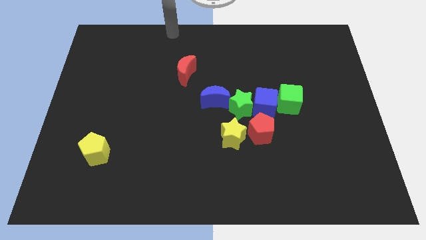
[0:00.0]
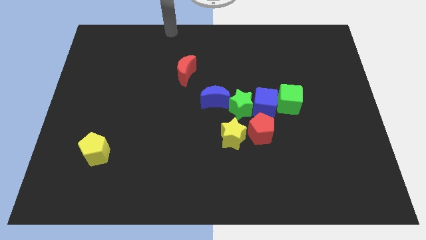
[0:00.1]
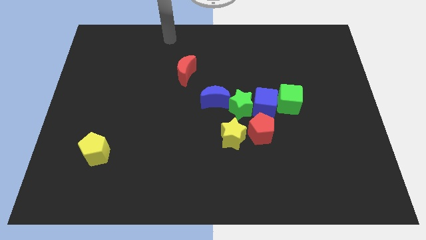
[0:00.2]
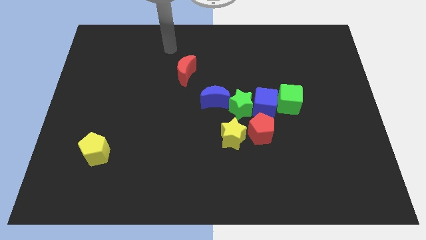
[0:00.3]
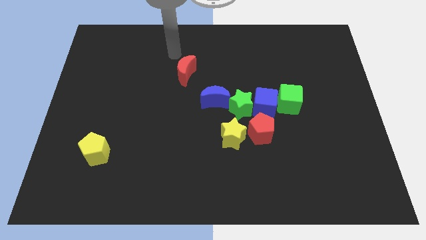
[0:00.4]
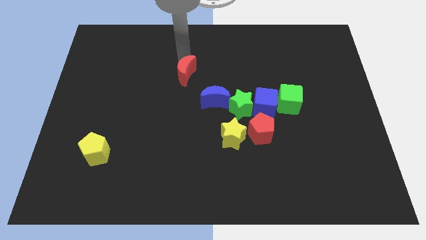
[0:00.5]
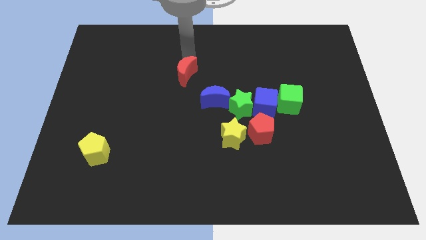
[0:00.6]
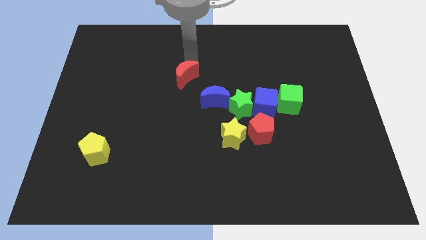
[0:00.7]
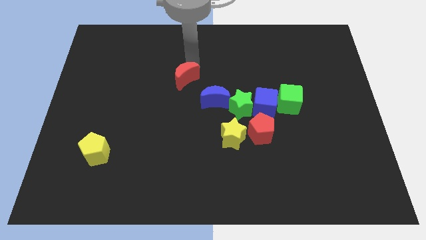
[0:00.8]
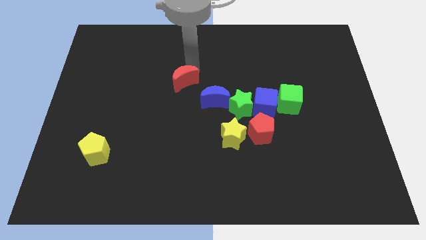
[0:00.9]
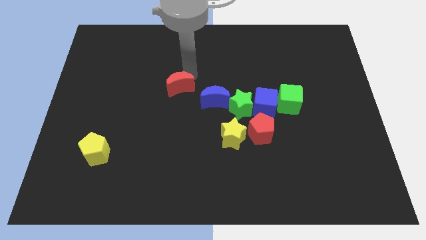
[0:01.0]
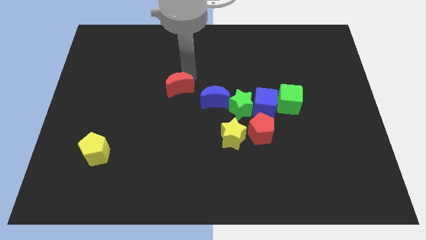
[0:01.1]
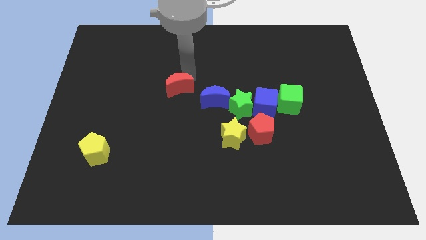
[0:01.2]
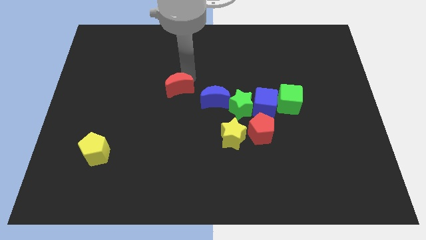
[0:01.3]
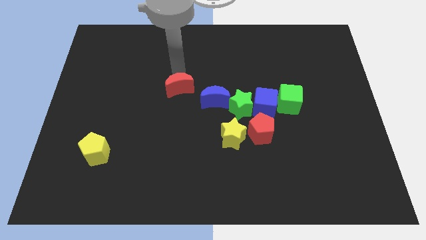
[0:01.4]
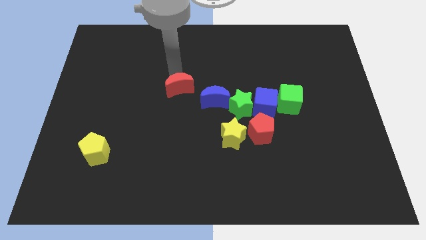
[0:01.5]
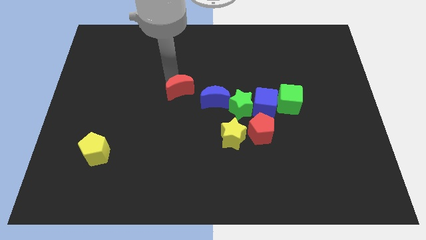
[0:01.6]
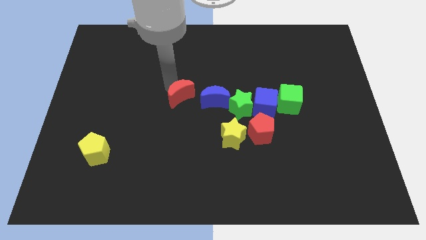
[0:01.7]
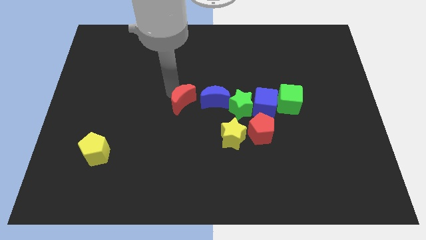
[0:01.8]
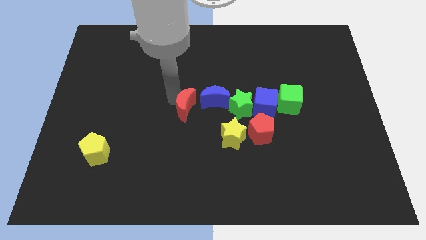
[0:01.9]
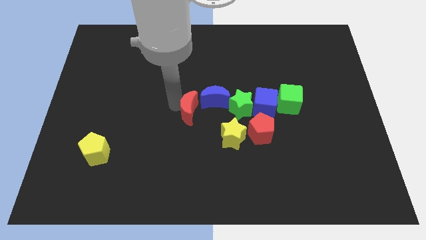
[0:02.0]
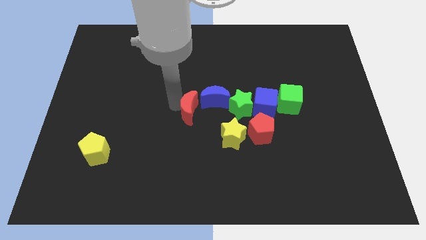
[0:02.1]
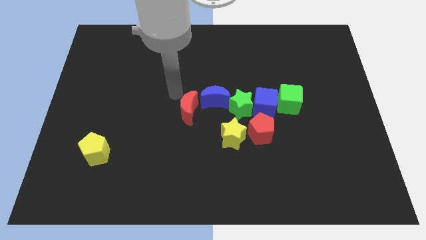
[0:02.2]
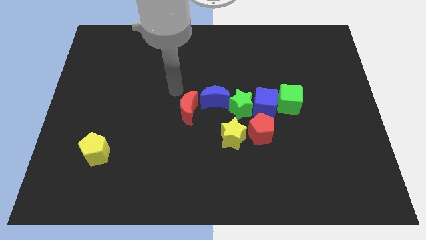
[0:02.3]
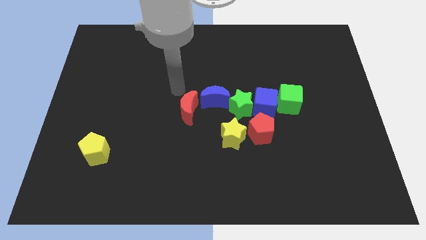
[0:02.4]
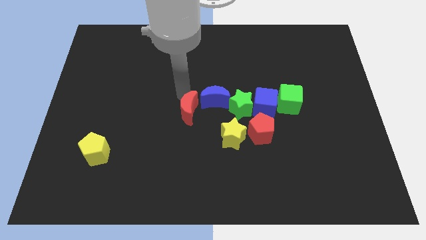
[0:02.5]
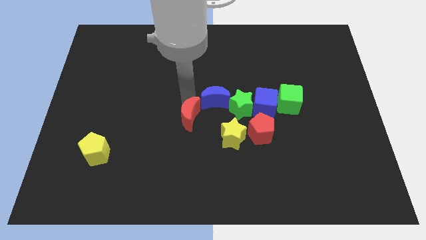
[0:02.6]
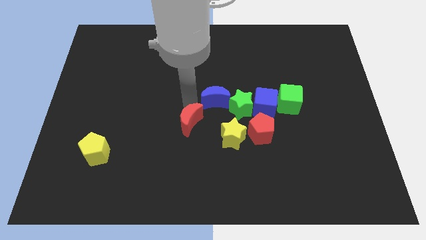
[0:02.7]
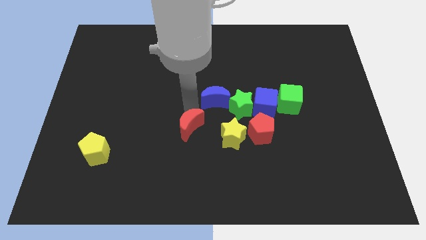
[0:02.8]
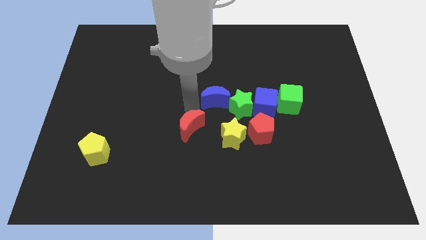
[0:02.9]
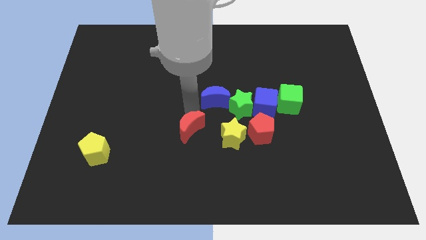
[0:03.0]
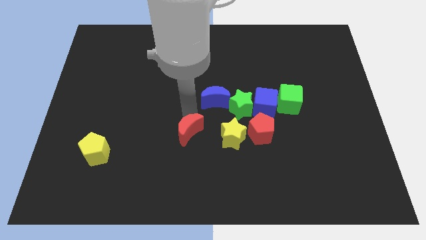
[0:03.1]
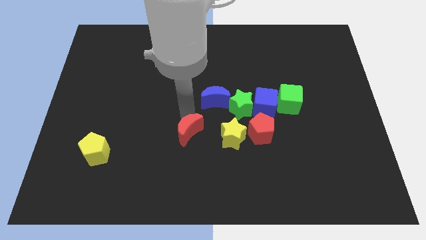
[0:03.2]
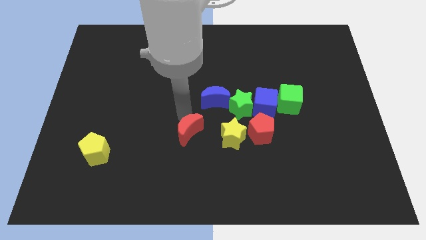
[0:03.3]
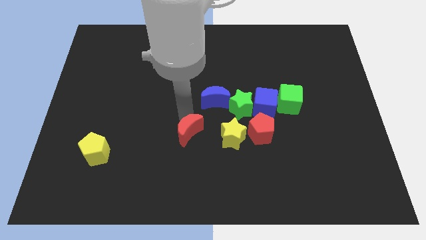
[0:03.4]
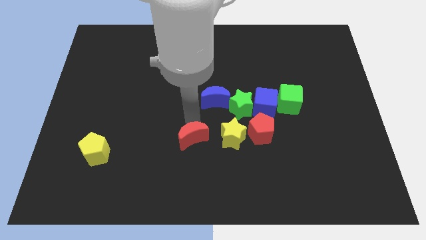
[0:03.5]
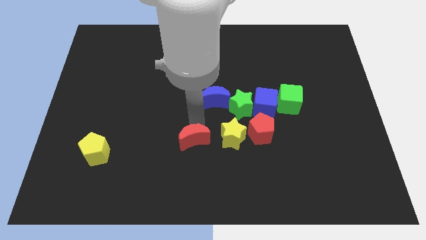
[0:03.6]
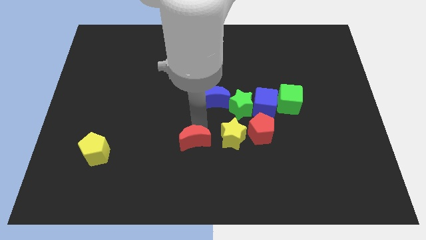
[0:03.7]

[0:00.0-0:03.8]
place red moon to the left of yellow star

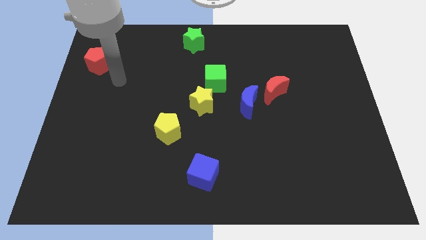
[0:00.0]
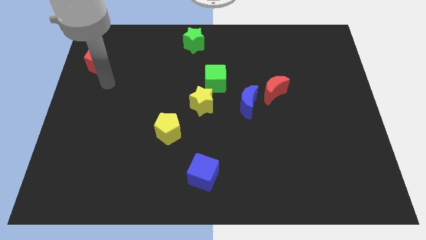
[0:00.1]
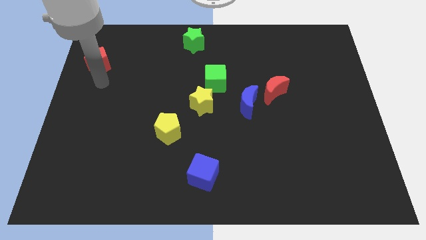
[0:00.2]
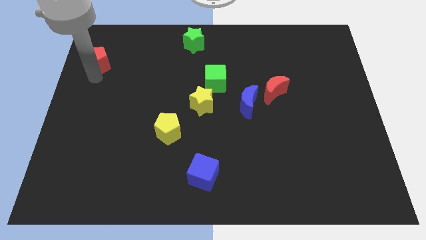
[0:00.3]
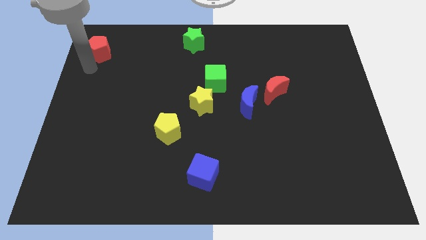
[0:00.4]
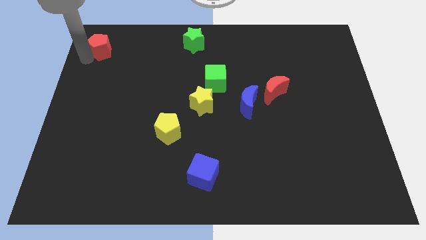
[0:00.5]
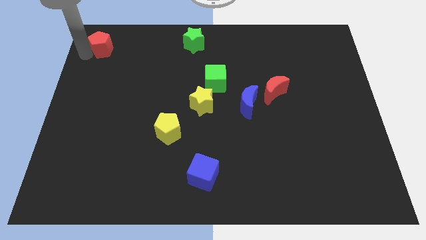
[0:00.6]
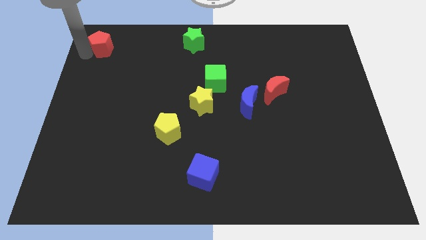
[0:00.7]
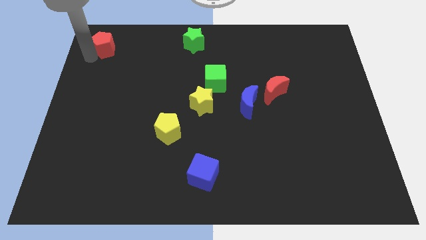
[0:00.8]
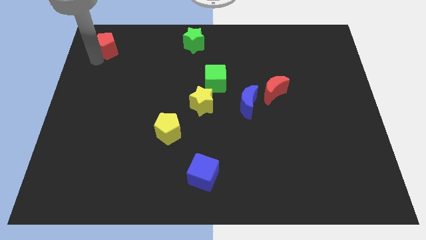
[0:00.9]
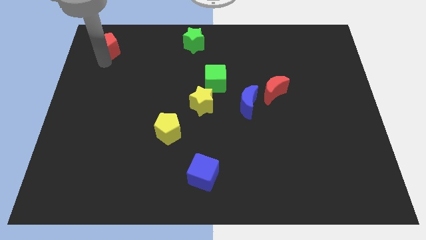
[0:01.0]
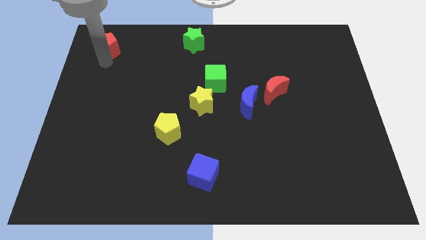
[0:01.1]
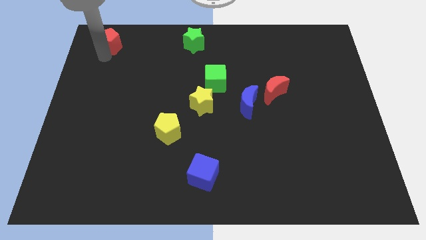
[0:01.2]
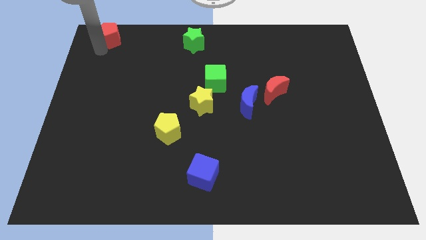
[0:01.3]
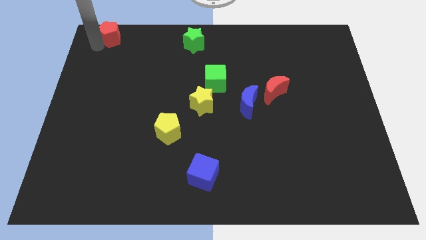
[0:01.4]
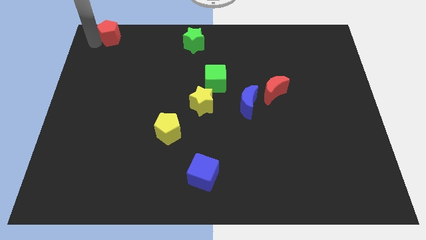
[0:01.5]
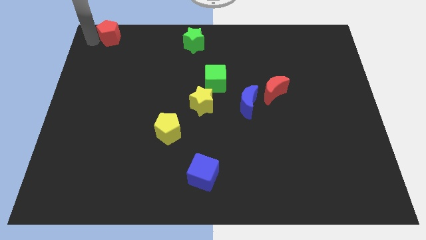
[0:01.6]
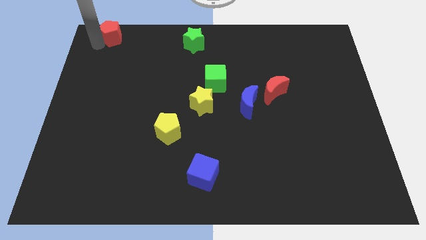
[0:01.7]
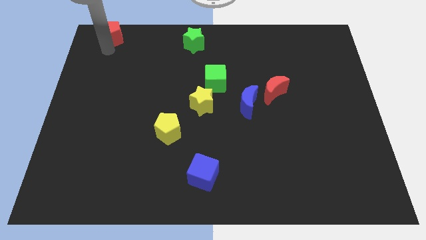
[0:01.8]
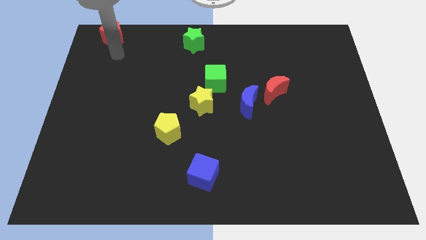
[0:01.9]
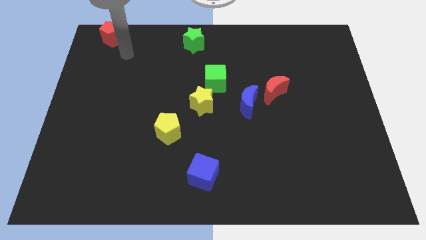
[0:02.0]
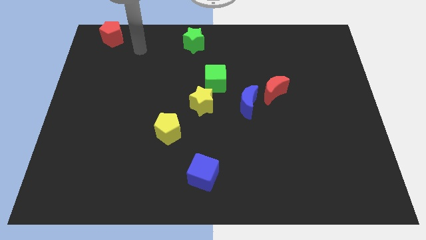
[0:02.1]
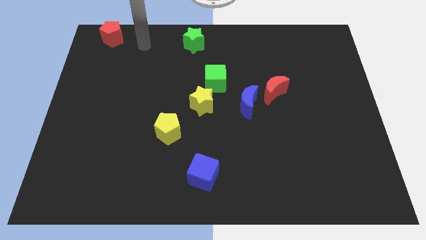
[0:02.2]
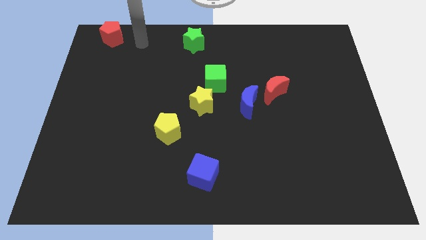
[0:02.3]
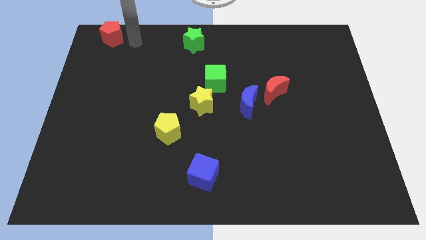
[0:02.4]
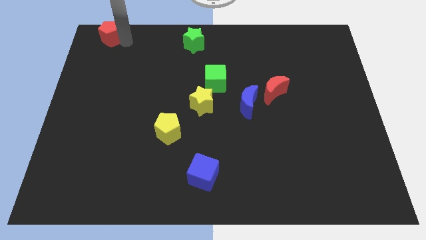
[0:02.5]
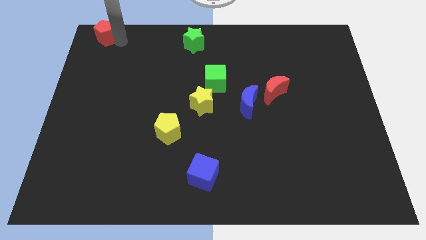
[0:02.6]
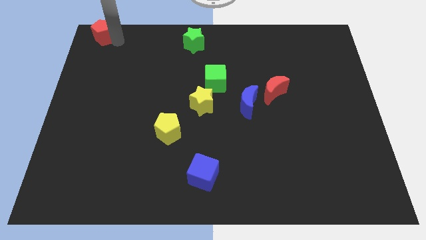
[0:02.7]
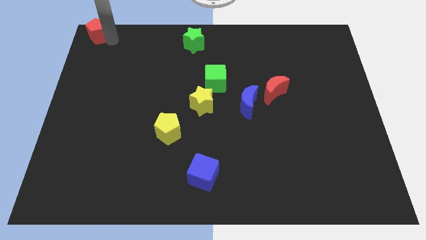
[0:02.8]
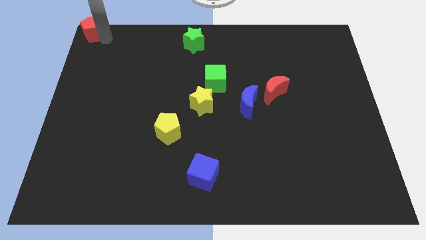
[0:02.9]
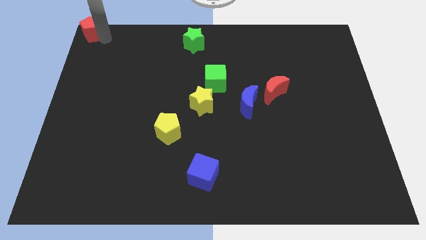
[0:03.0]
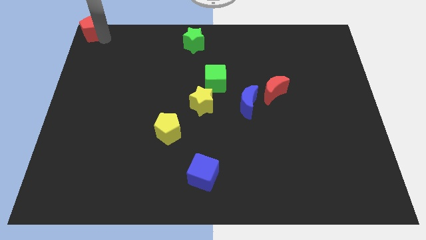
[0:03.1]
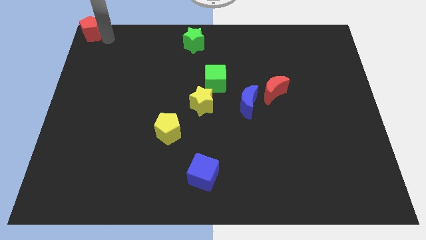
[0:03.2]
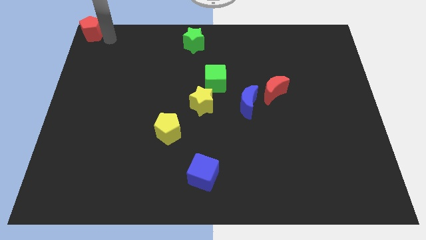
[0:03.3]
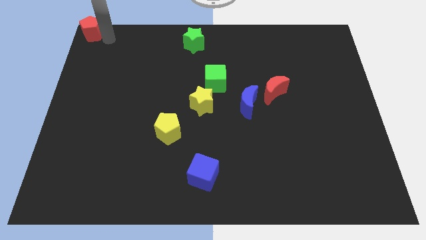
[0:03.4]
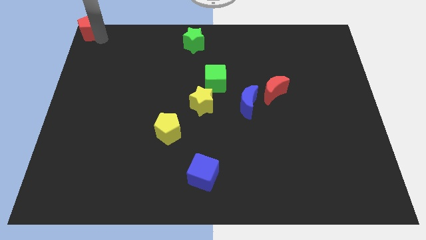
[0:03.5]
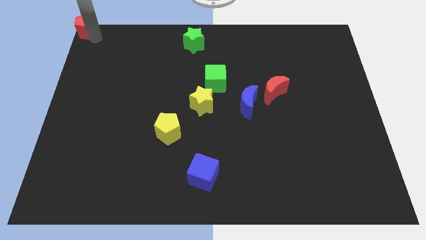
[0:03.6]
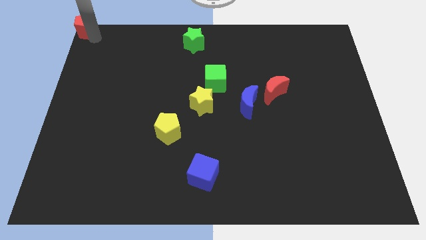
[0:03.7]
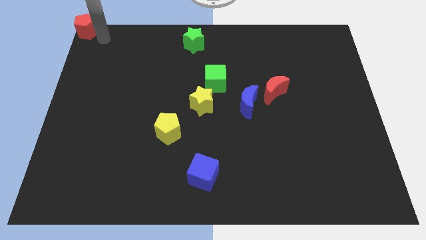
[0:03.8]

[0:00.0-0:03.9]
place red pentagon towards top left corner

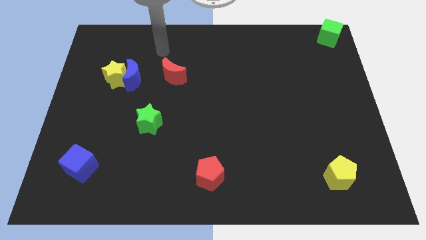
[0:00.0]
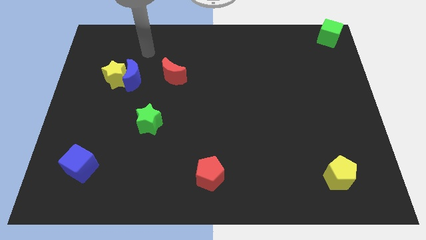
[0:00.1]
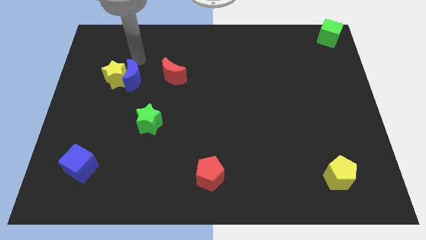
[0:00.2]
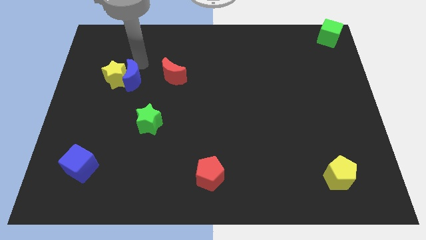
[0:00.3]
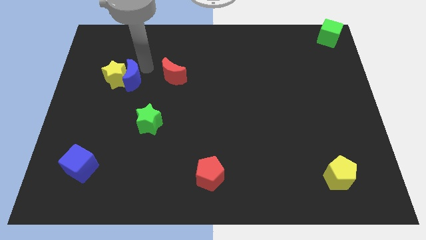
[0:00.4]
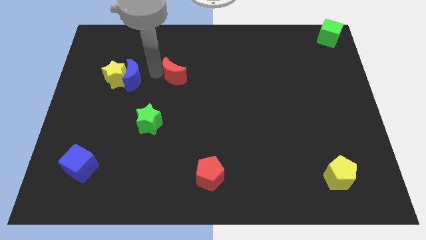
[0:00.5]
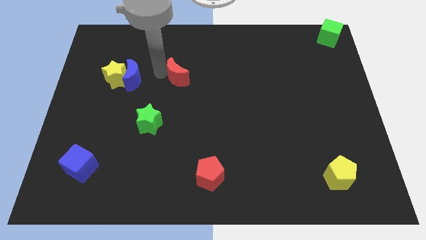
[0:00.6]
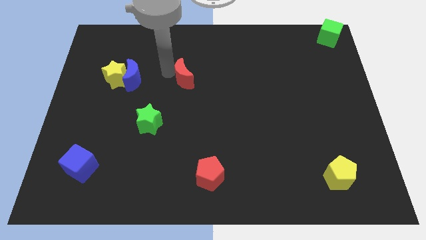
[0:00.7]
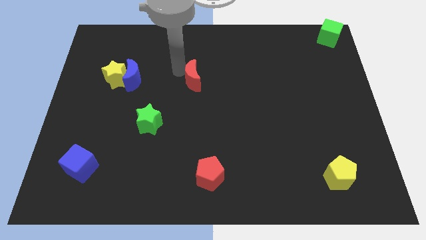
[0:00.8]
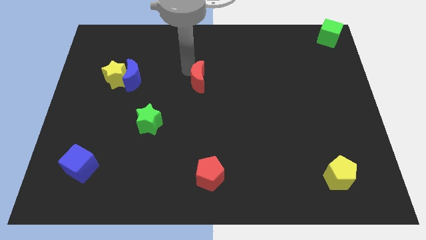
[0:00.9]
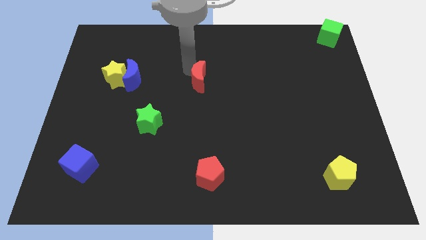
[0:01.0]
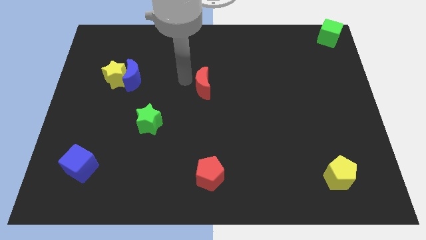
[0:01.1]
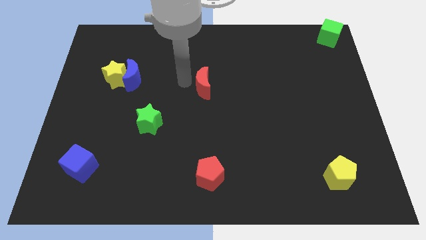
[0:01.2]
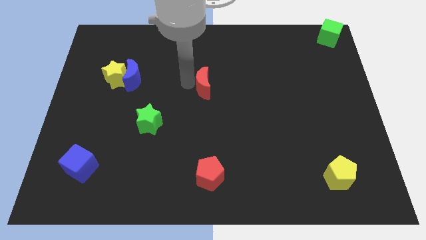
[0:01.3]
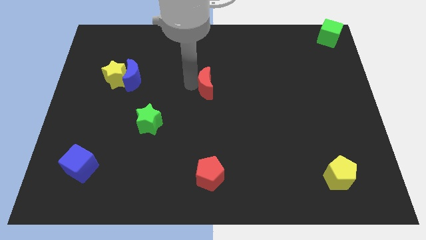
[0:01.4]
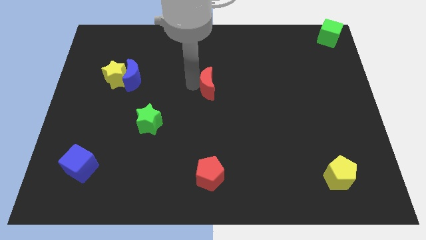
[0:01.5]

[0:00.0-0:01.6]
put the red moon at the center of the board
